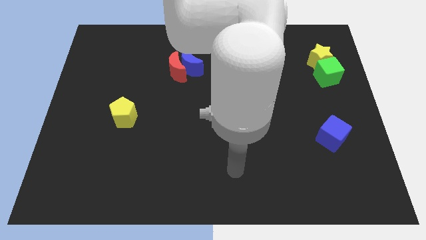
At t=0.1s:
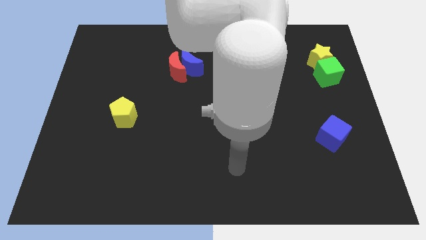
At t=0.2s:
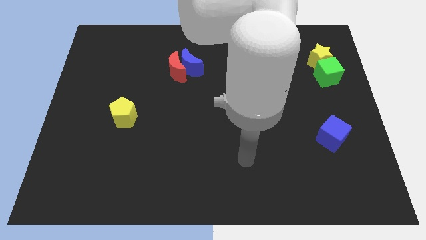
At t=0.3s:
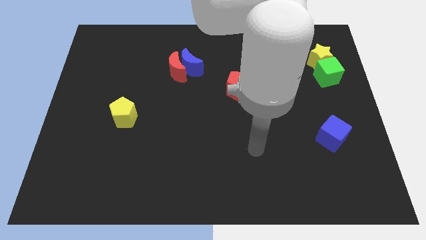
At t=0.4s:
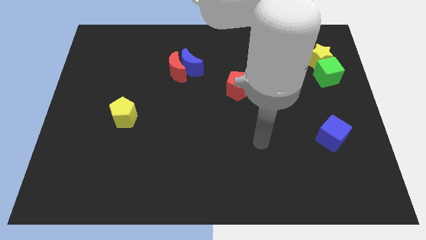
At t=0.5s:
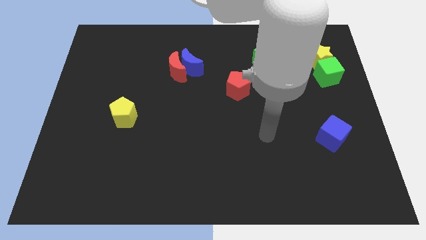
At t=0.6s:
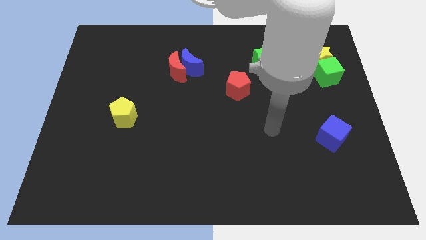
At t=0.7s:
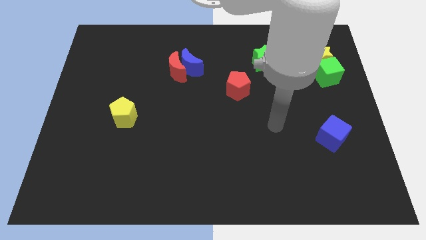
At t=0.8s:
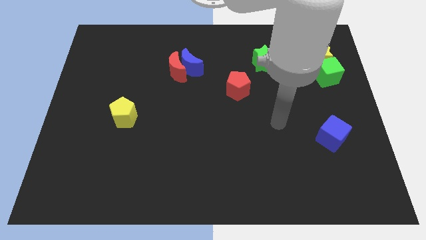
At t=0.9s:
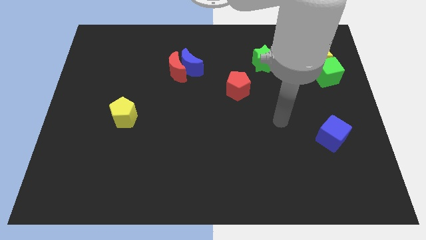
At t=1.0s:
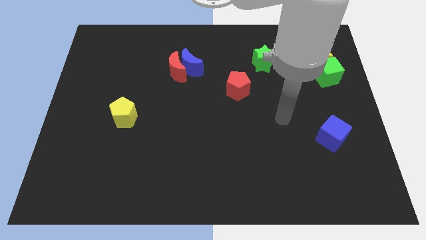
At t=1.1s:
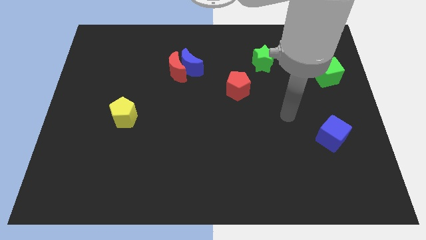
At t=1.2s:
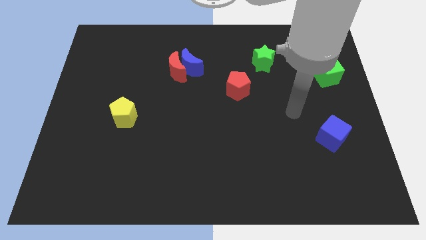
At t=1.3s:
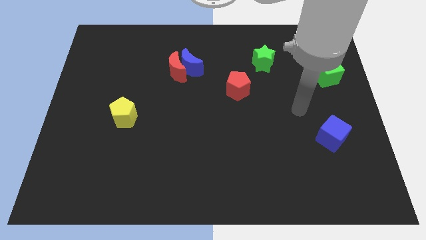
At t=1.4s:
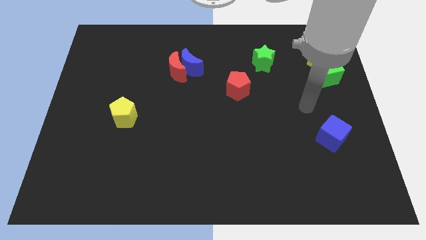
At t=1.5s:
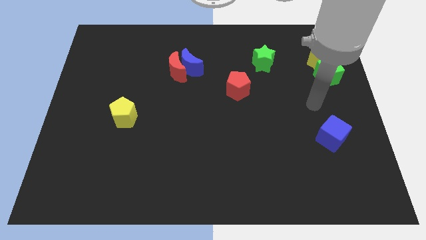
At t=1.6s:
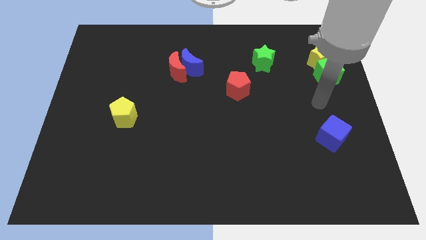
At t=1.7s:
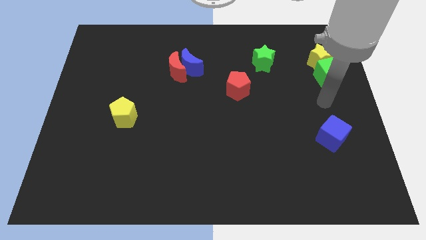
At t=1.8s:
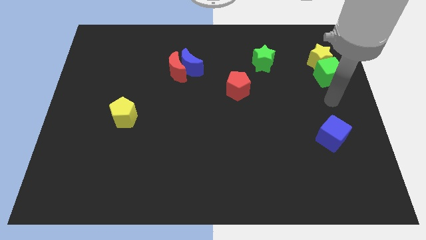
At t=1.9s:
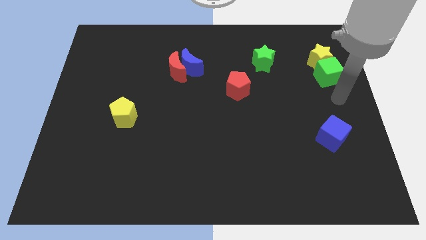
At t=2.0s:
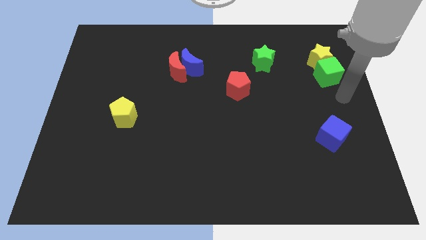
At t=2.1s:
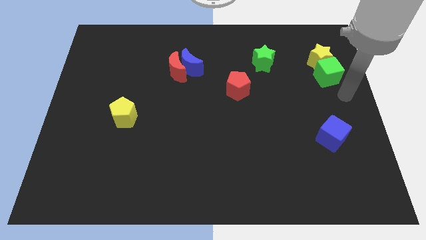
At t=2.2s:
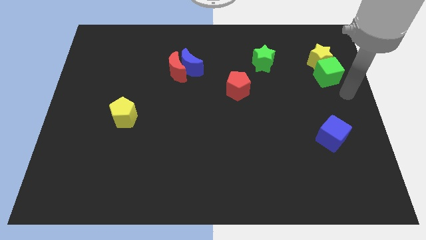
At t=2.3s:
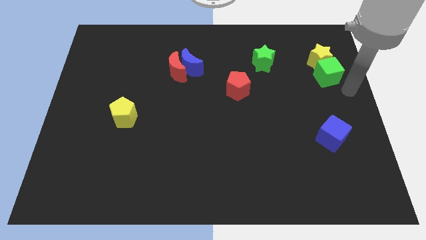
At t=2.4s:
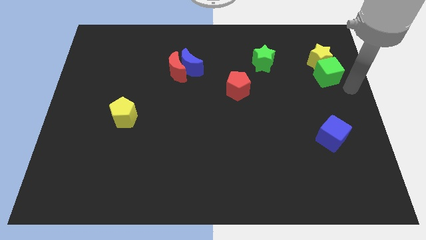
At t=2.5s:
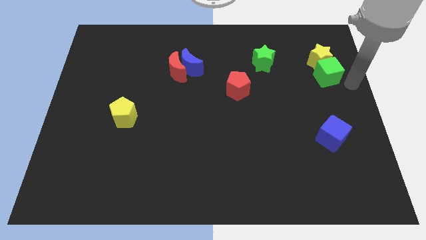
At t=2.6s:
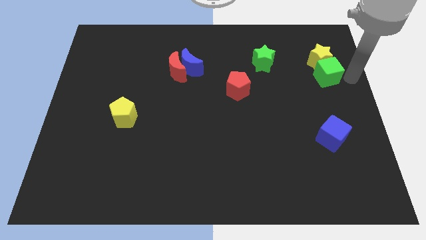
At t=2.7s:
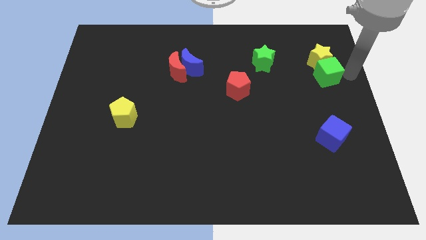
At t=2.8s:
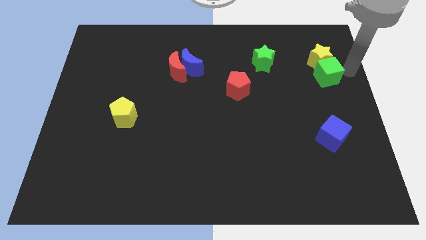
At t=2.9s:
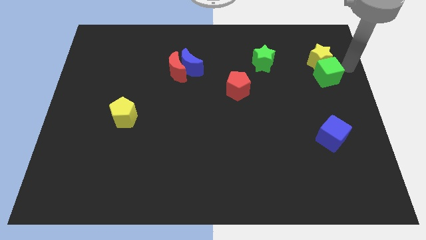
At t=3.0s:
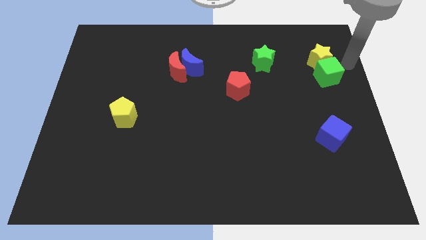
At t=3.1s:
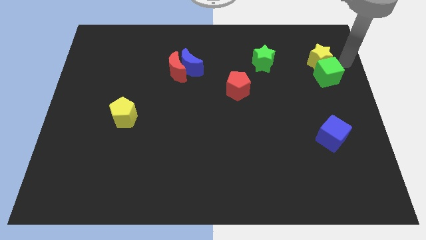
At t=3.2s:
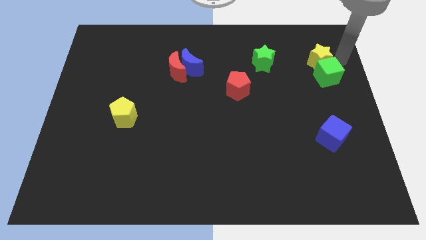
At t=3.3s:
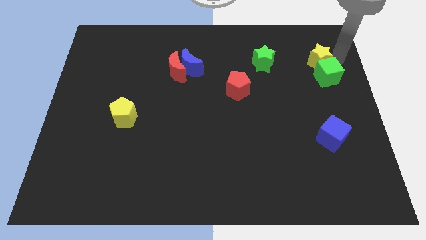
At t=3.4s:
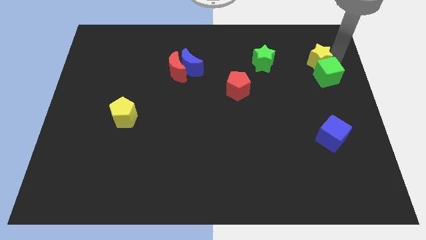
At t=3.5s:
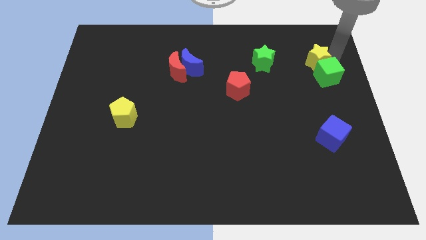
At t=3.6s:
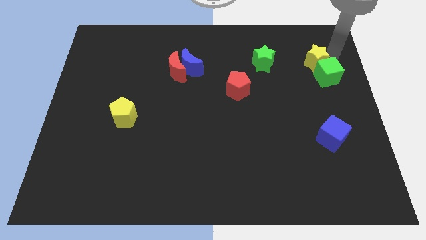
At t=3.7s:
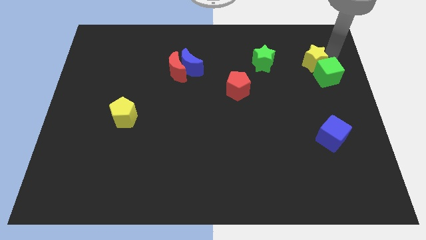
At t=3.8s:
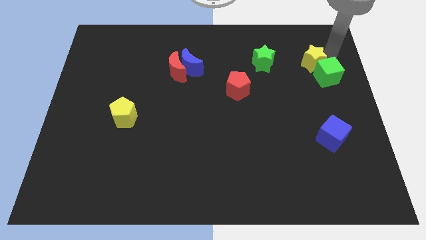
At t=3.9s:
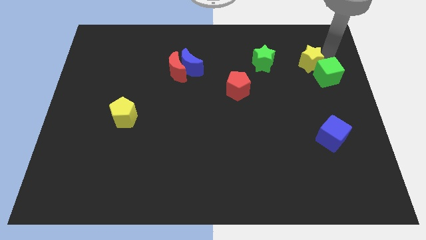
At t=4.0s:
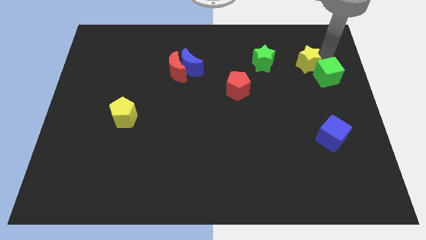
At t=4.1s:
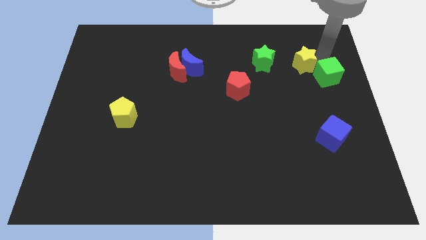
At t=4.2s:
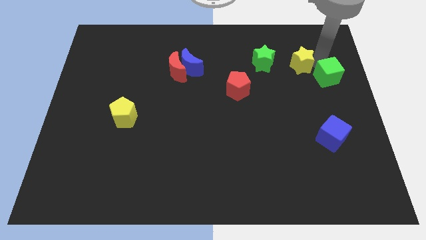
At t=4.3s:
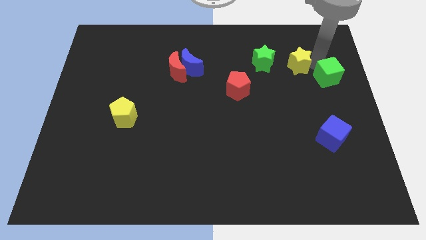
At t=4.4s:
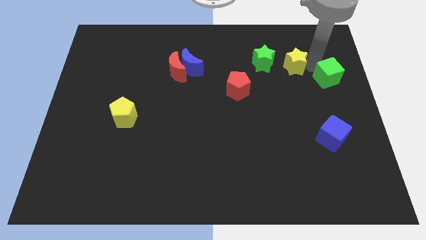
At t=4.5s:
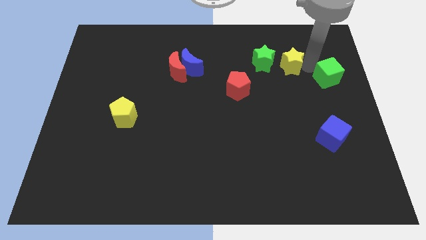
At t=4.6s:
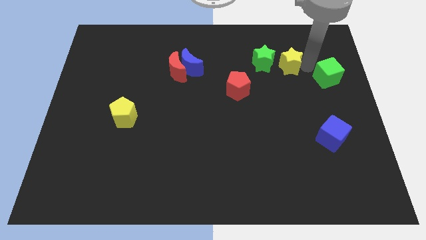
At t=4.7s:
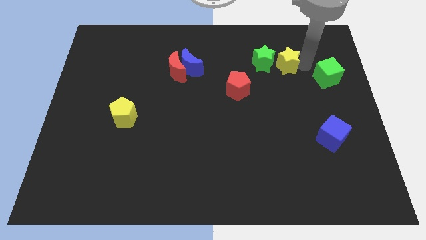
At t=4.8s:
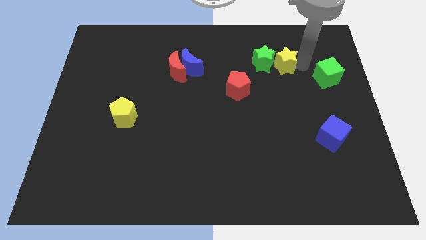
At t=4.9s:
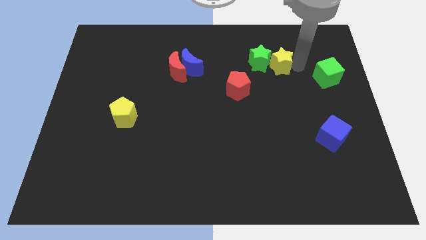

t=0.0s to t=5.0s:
slide the yellow star to the green star

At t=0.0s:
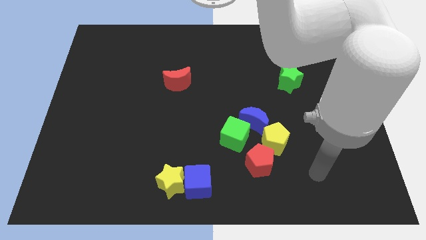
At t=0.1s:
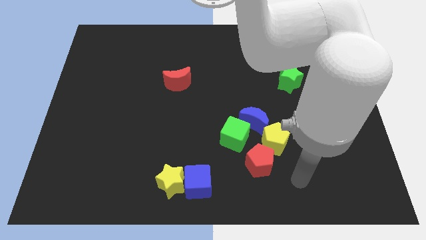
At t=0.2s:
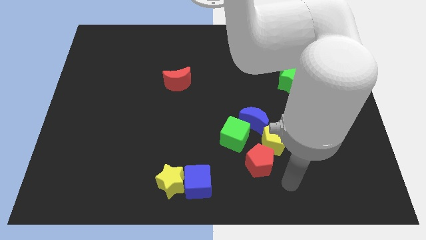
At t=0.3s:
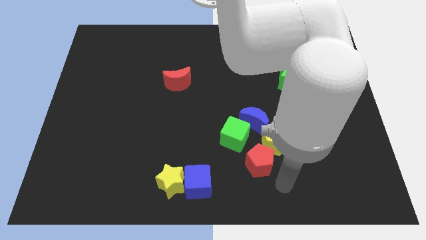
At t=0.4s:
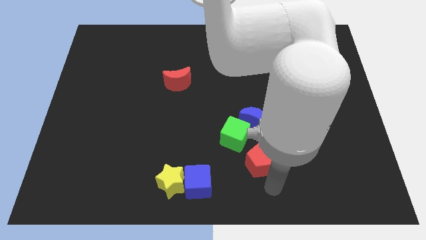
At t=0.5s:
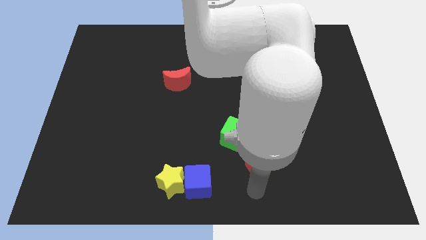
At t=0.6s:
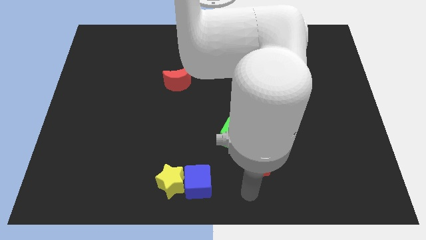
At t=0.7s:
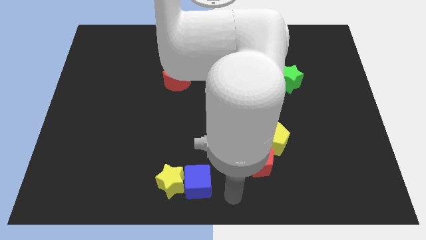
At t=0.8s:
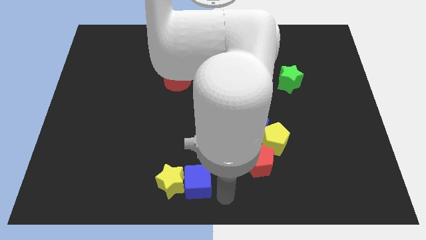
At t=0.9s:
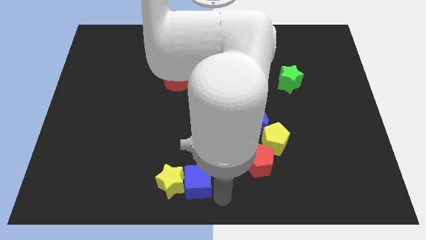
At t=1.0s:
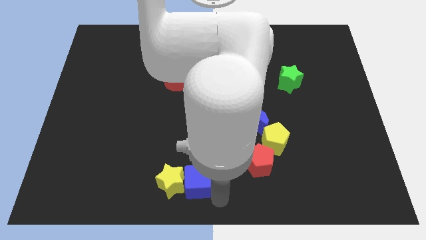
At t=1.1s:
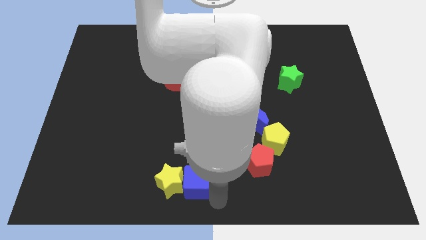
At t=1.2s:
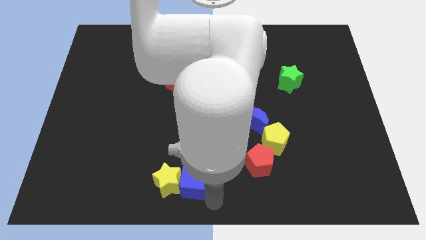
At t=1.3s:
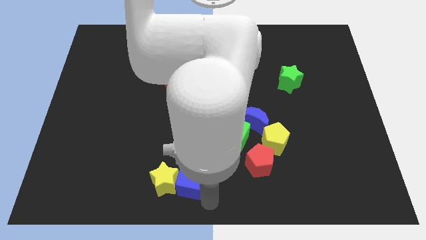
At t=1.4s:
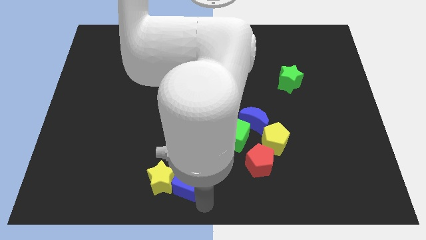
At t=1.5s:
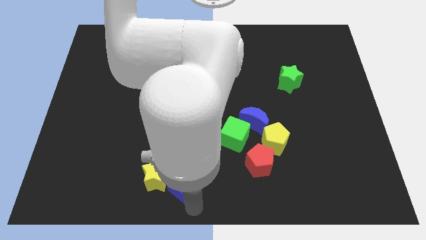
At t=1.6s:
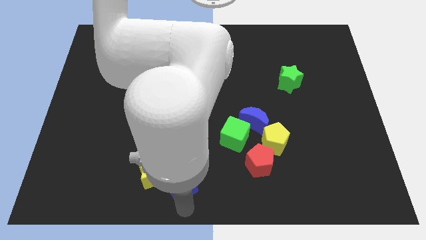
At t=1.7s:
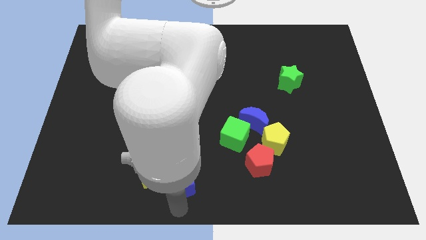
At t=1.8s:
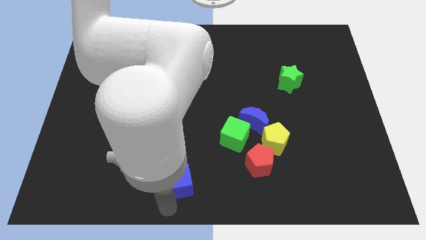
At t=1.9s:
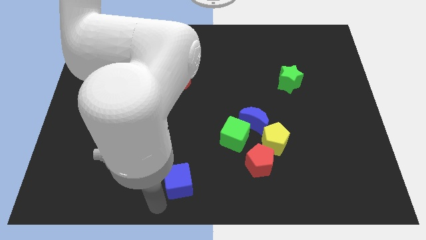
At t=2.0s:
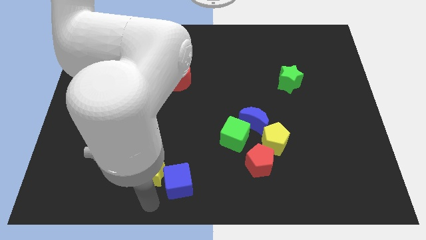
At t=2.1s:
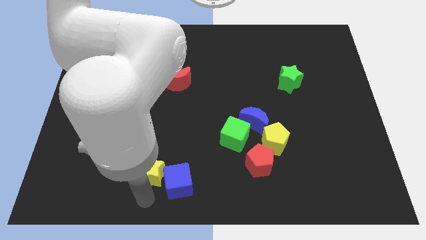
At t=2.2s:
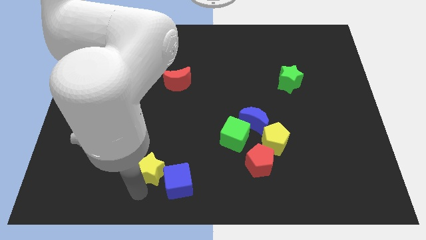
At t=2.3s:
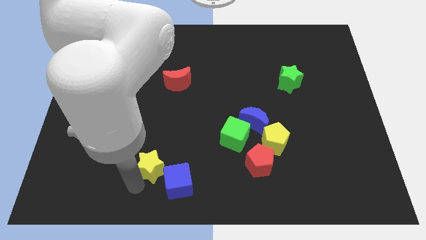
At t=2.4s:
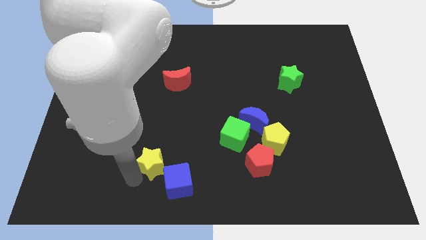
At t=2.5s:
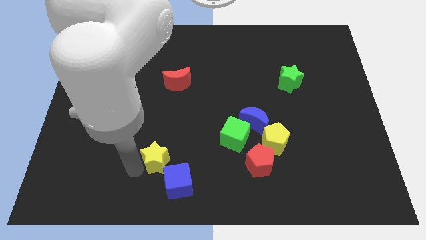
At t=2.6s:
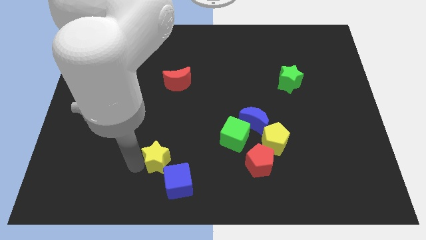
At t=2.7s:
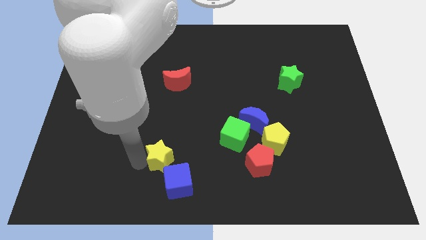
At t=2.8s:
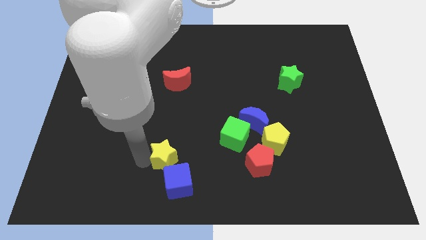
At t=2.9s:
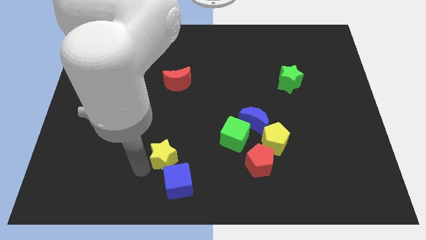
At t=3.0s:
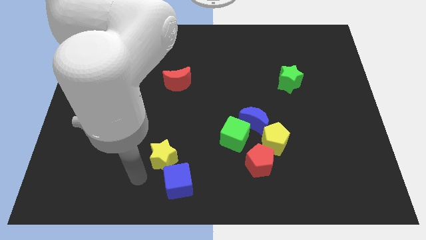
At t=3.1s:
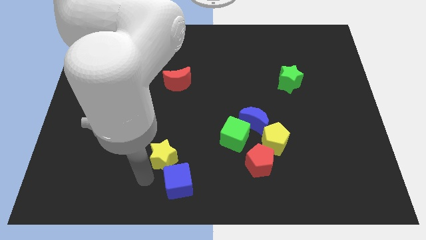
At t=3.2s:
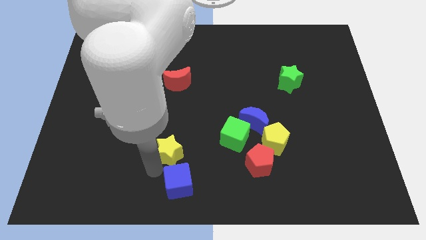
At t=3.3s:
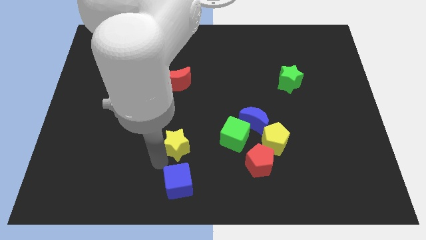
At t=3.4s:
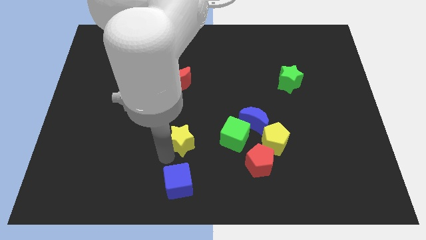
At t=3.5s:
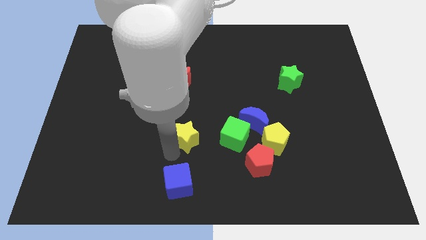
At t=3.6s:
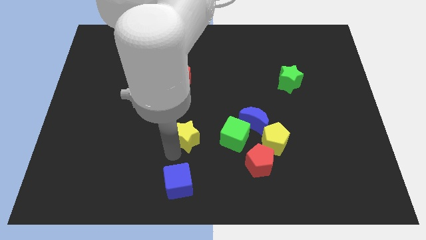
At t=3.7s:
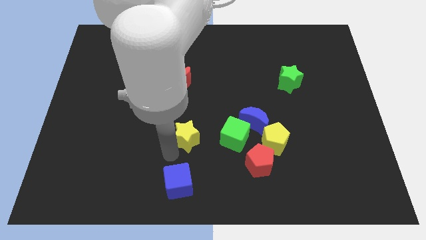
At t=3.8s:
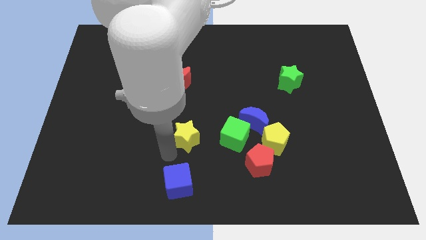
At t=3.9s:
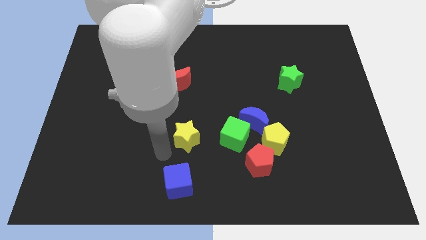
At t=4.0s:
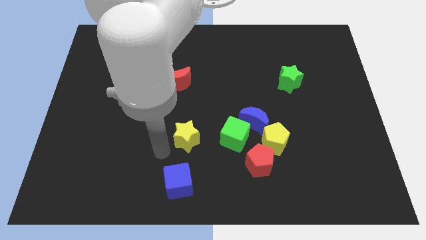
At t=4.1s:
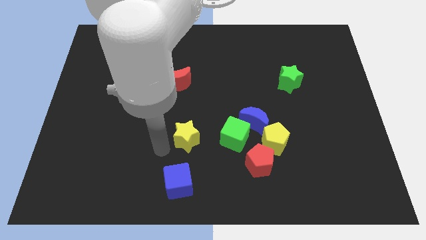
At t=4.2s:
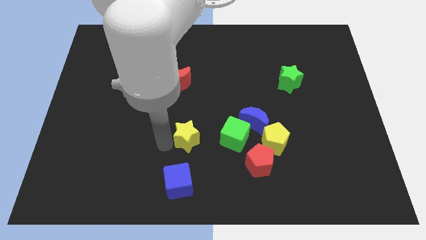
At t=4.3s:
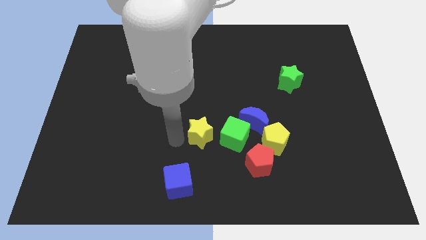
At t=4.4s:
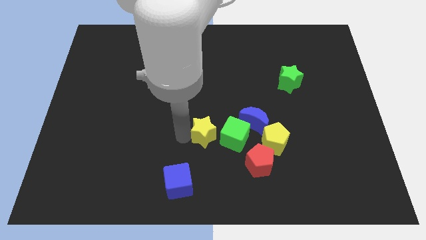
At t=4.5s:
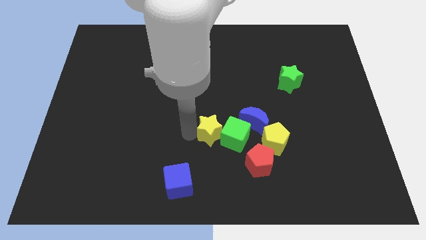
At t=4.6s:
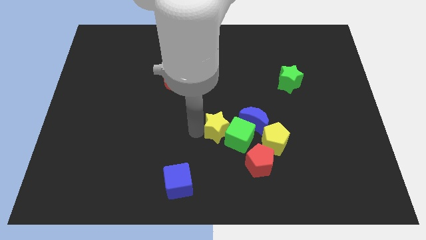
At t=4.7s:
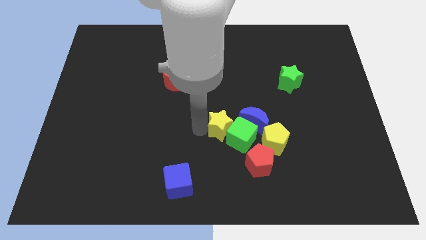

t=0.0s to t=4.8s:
move the yellow star towards the green cube
